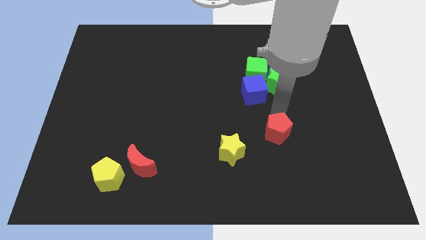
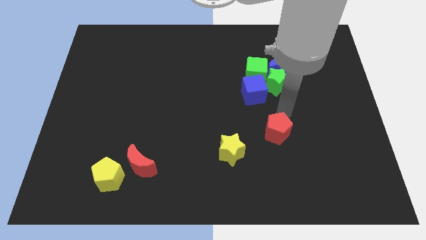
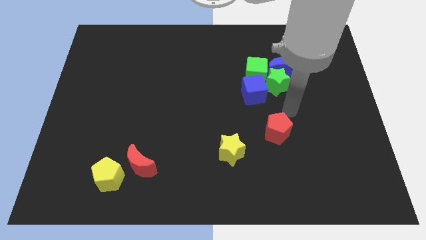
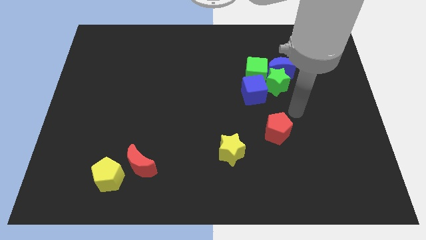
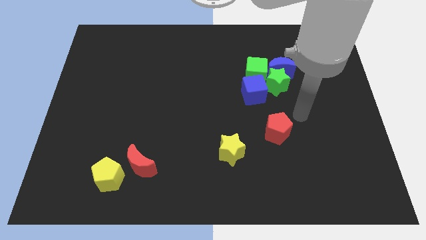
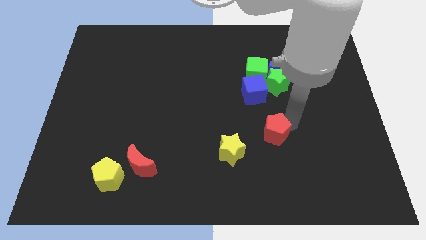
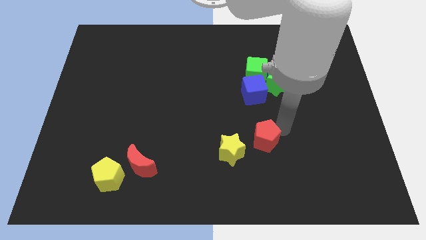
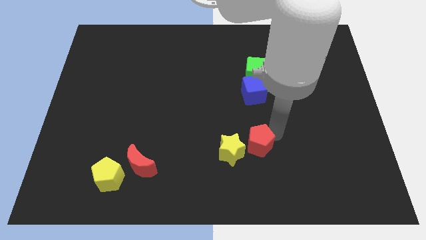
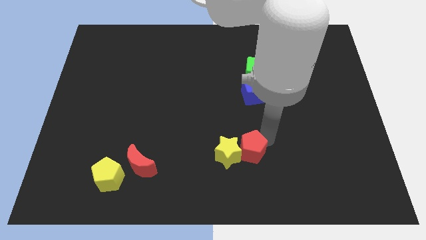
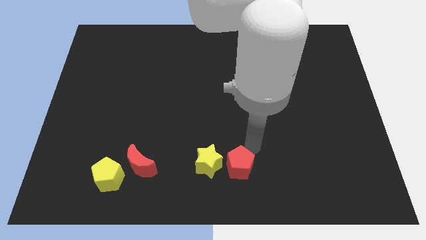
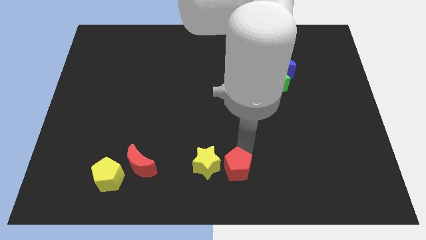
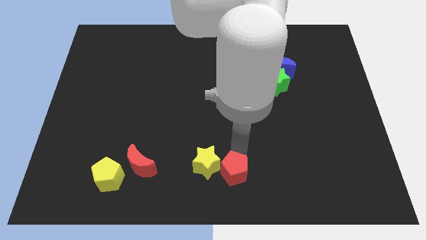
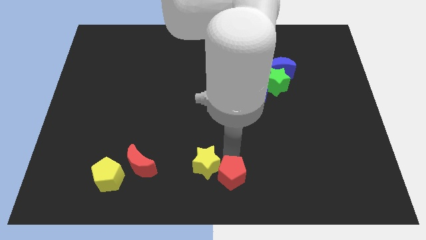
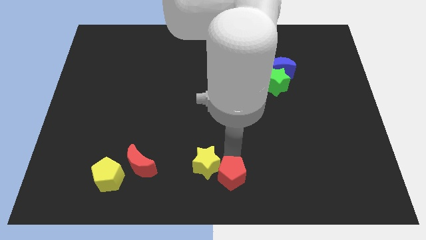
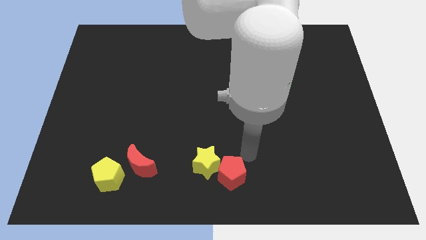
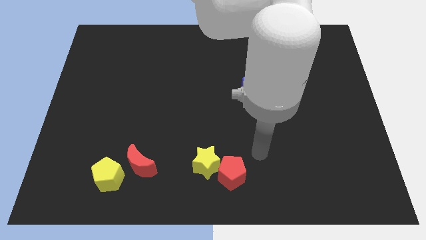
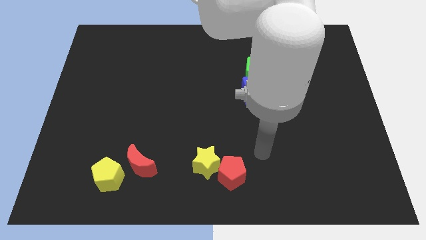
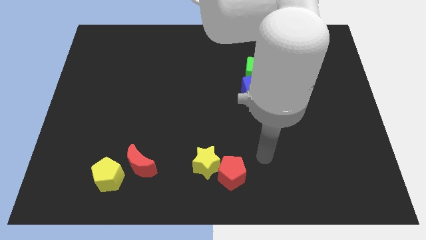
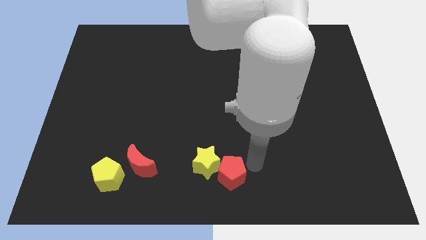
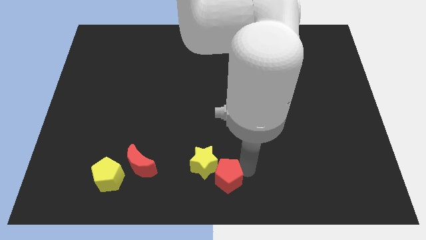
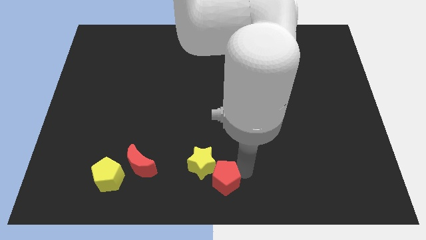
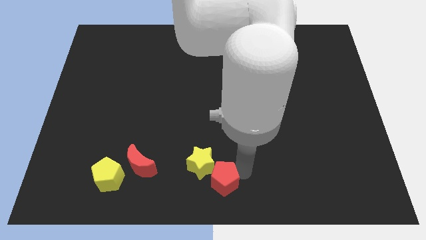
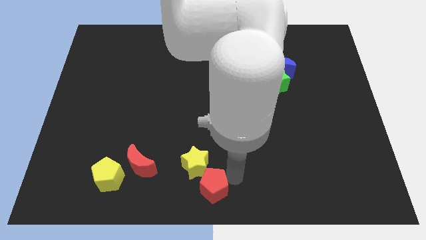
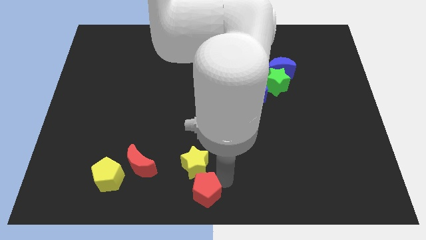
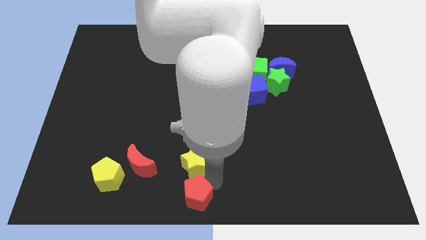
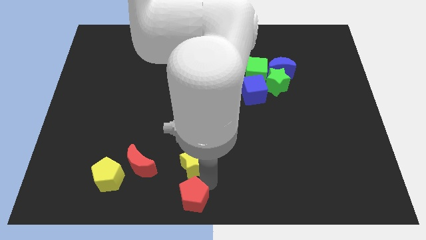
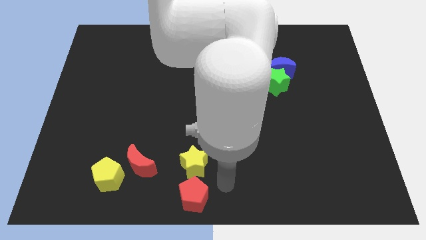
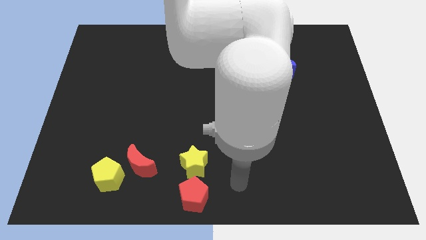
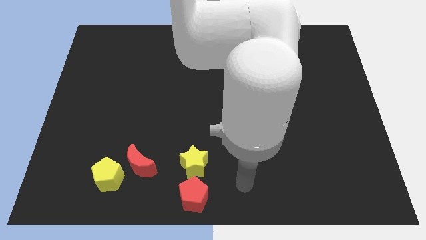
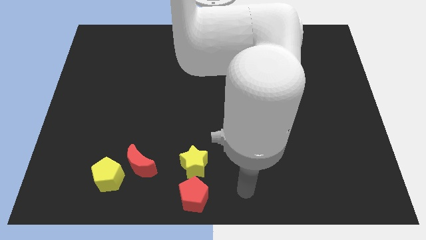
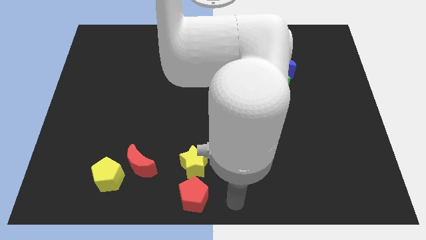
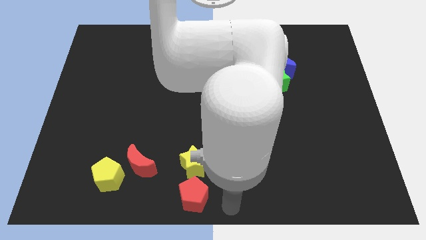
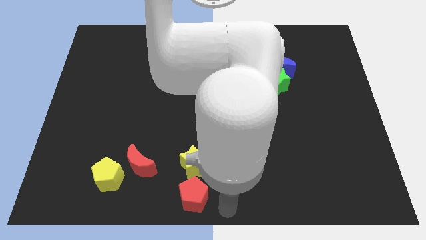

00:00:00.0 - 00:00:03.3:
move the red pentagon at the bottom of the yellow star

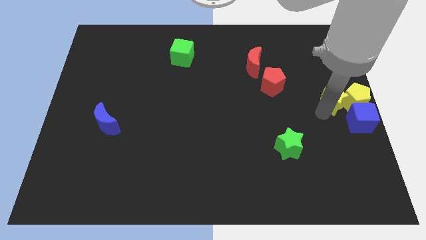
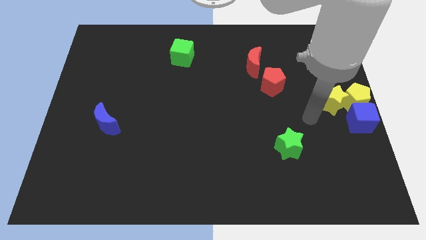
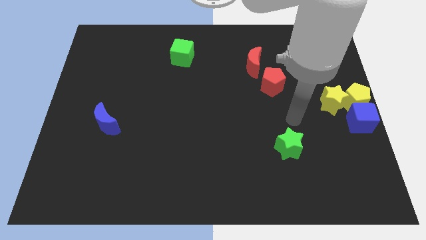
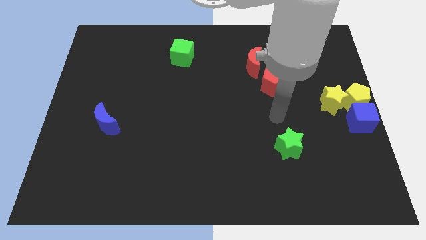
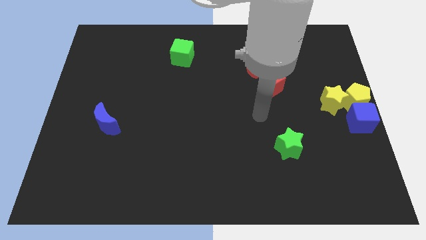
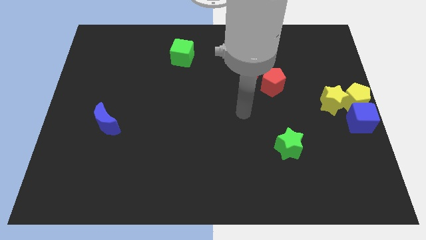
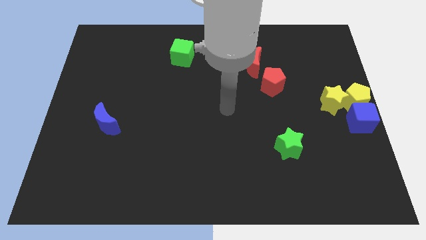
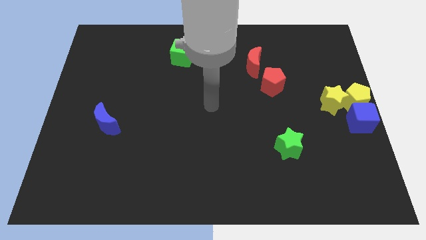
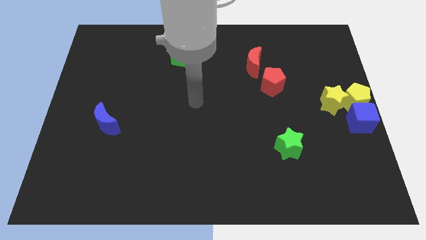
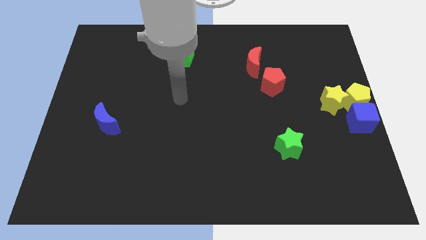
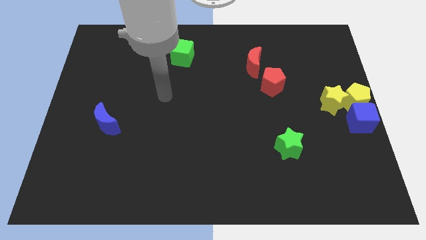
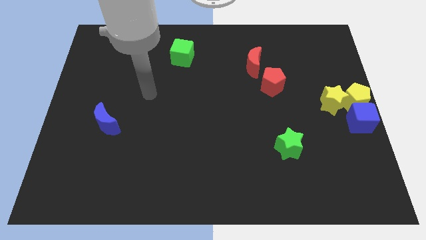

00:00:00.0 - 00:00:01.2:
move your hand away from the yellow star

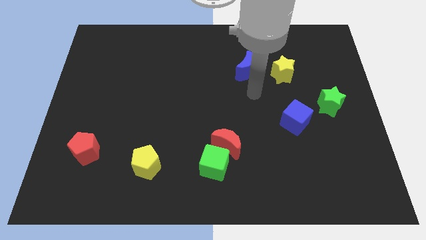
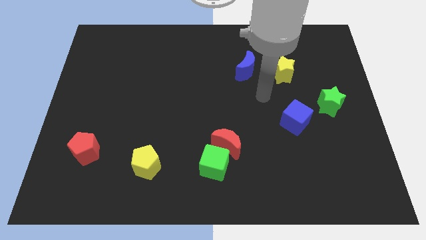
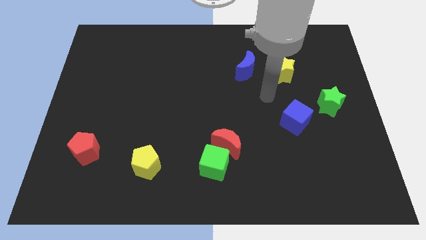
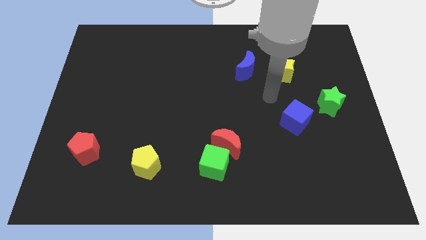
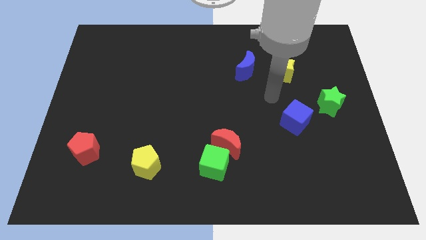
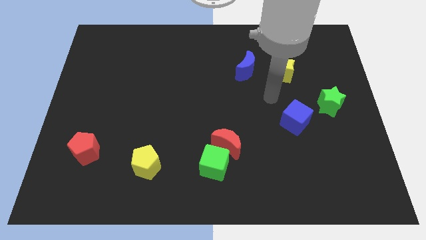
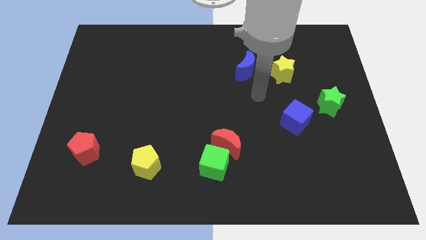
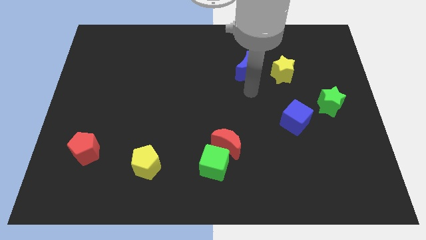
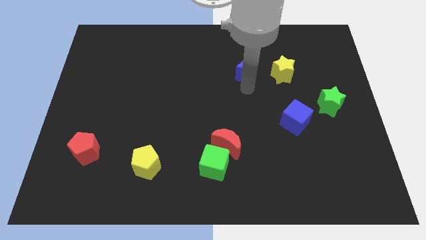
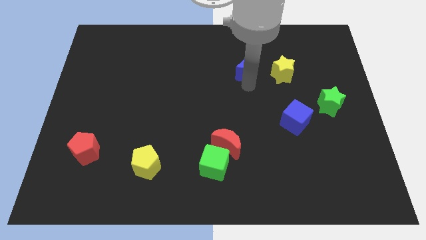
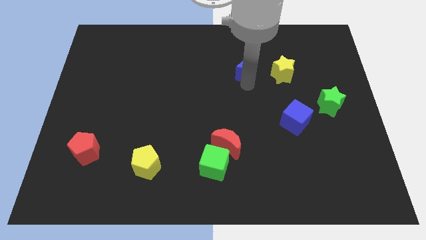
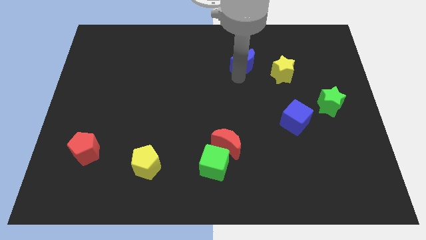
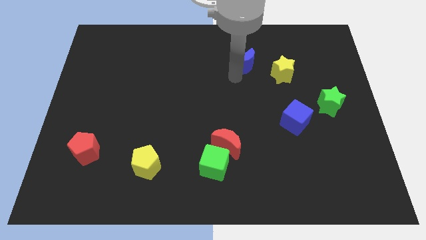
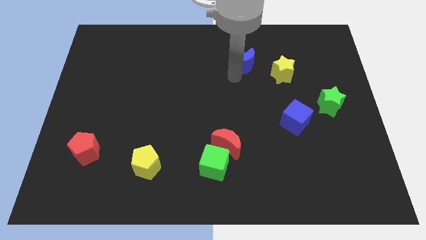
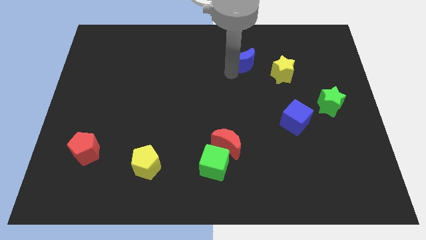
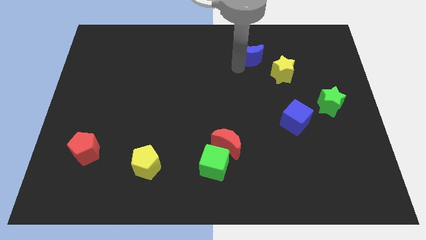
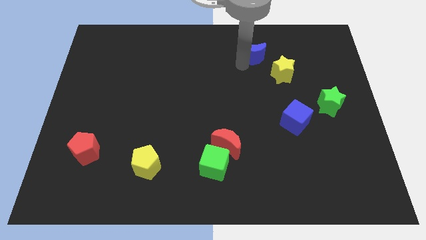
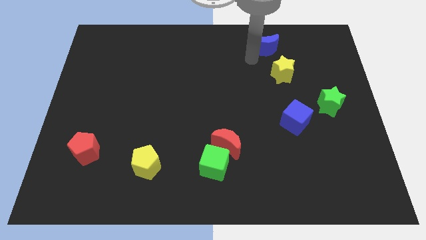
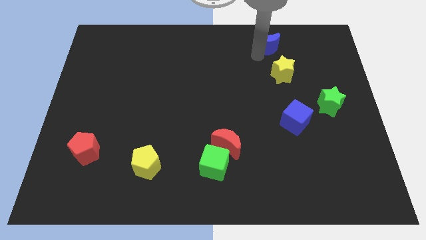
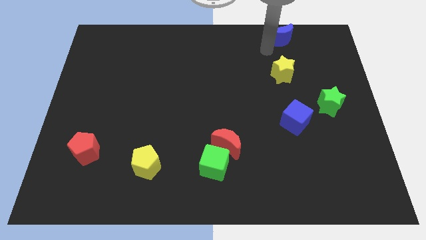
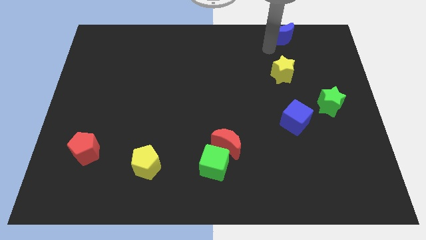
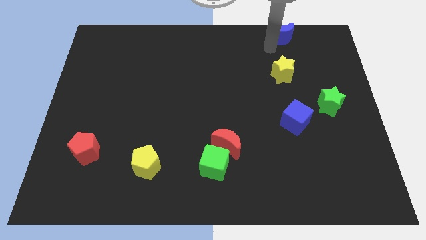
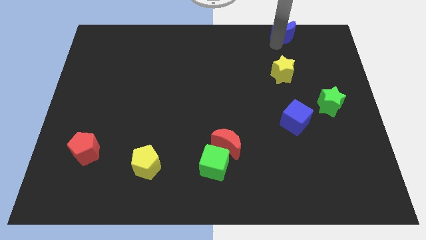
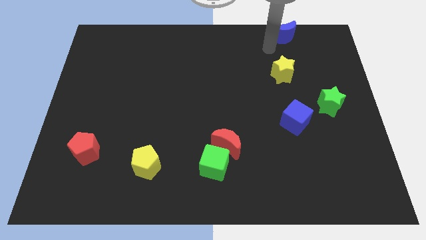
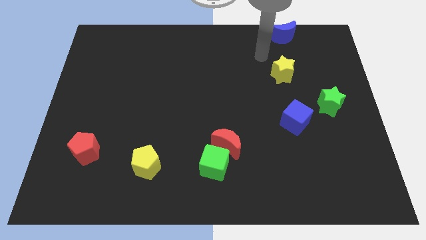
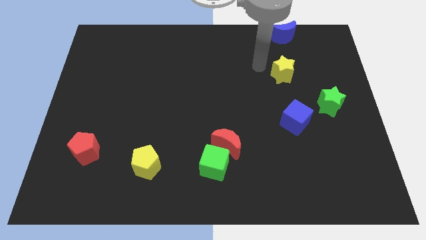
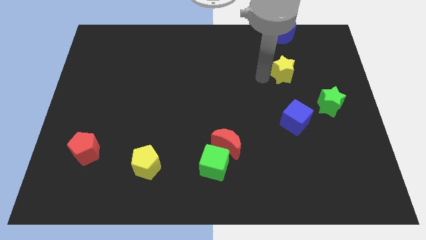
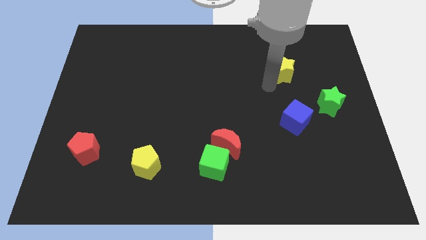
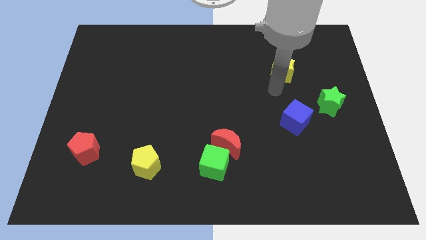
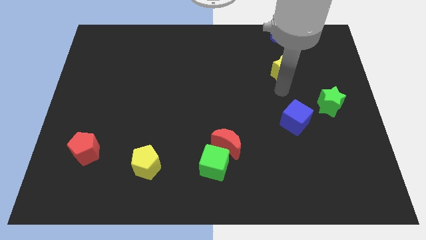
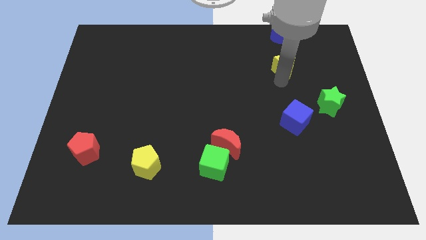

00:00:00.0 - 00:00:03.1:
move blue moon above the yellow star

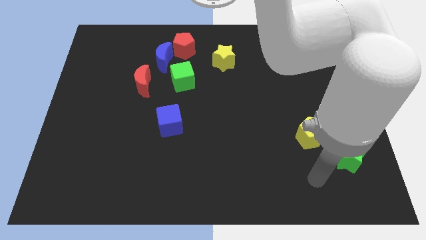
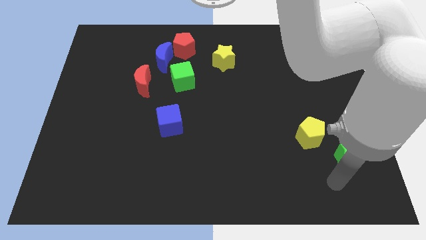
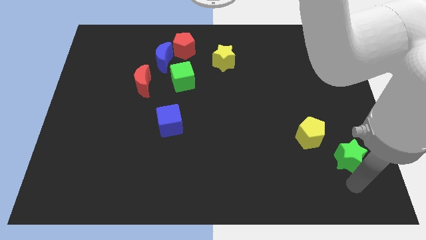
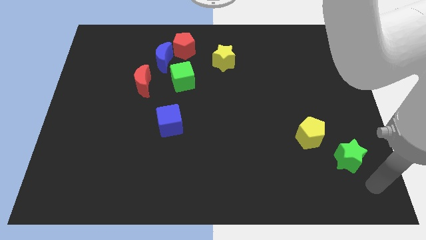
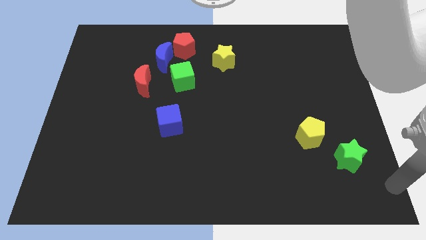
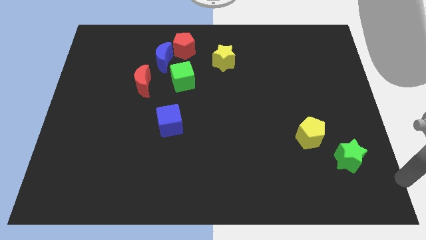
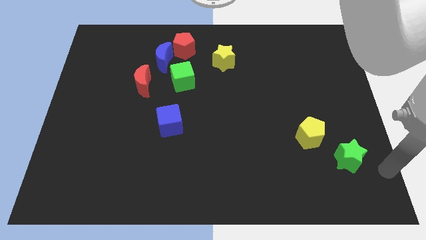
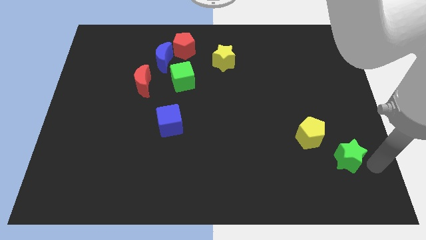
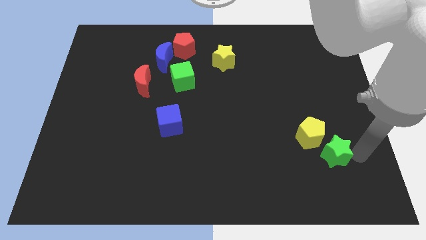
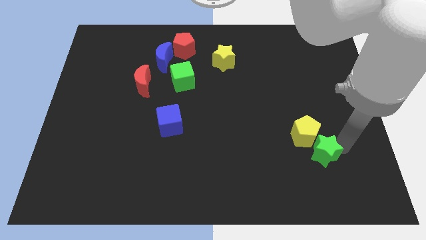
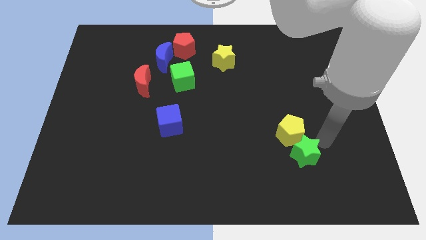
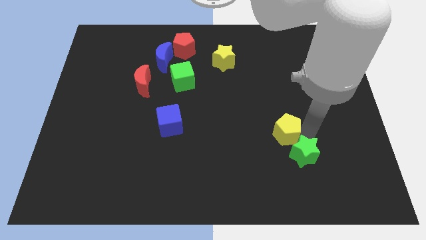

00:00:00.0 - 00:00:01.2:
slide the green star into the yellow pentagon

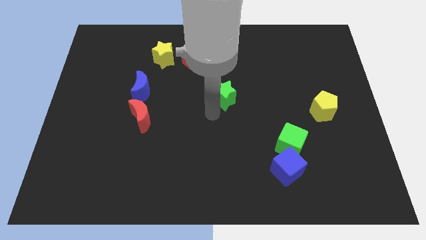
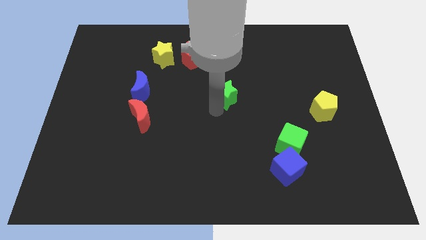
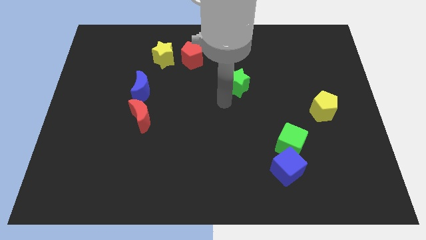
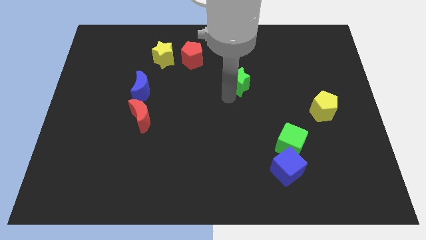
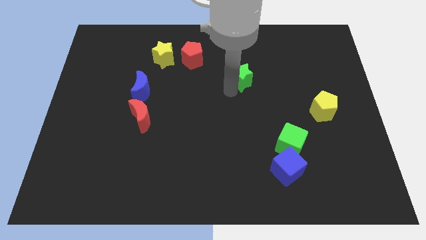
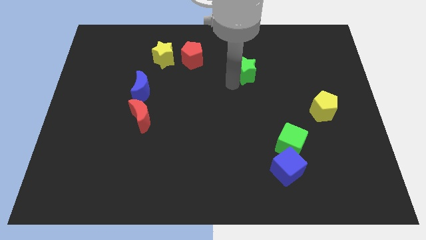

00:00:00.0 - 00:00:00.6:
move green star towards the upside of the board
